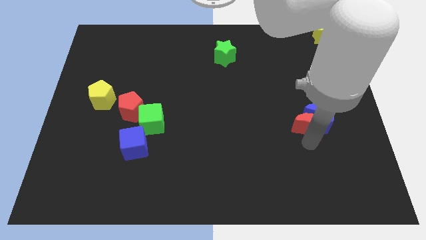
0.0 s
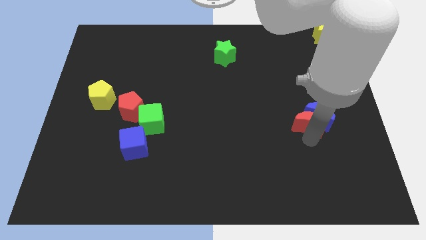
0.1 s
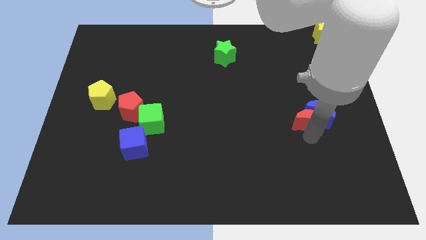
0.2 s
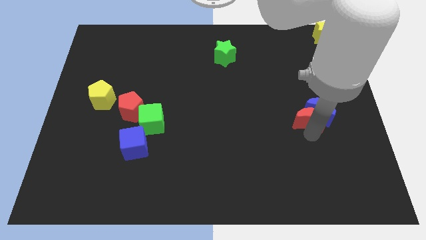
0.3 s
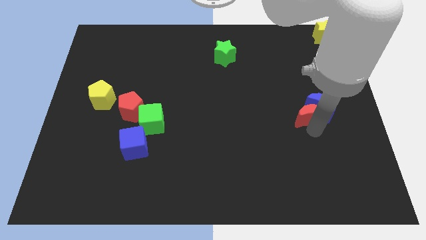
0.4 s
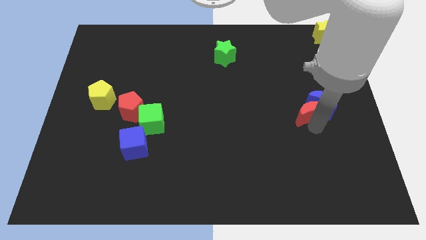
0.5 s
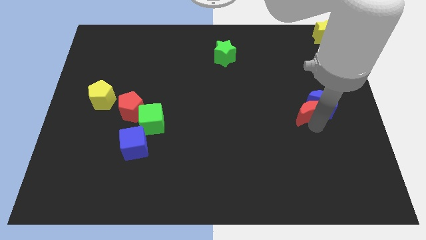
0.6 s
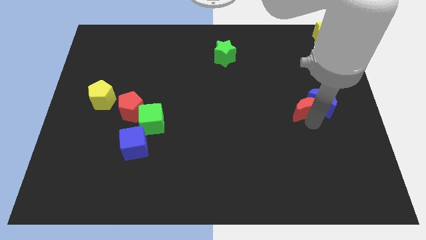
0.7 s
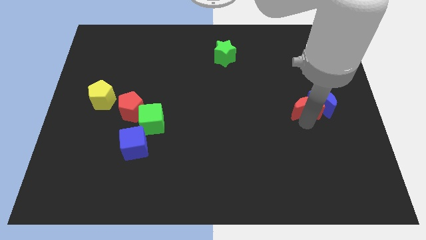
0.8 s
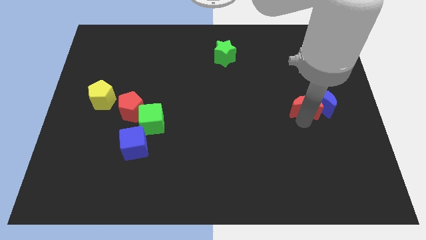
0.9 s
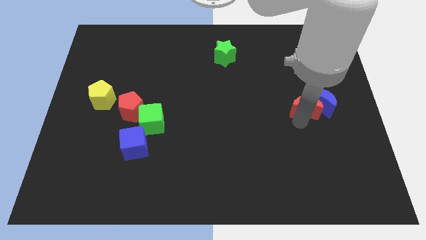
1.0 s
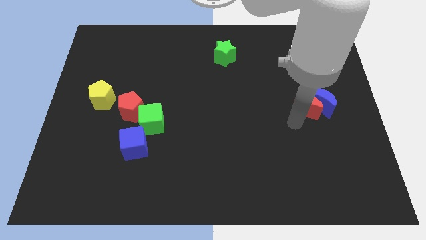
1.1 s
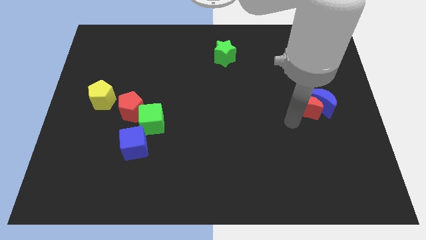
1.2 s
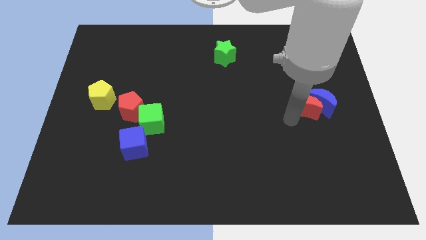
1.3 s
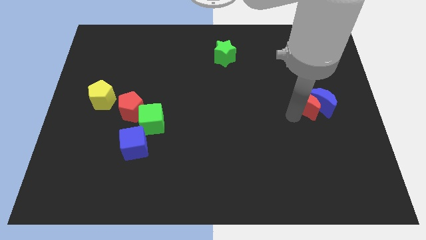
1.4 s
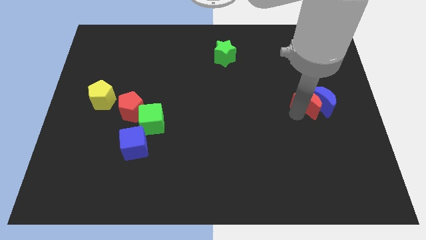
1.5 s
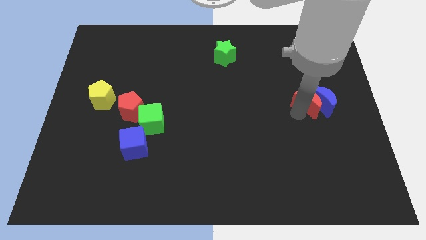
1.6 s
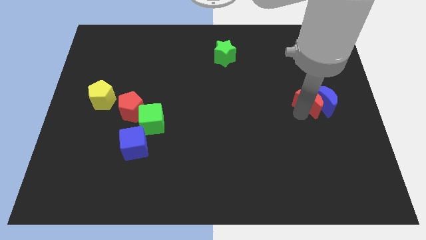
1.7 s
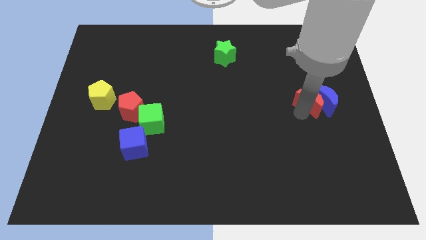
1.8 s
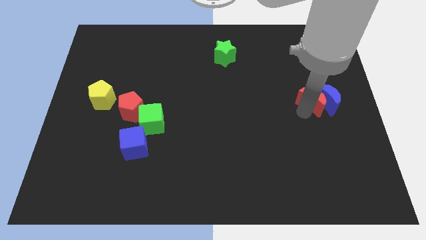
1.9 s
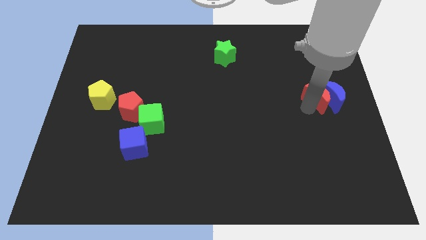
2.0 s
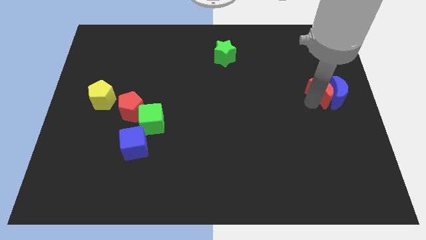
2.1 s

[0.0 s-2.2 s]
push the red moon and blue moon to the center right

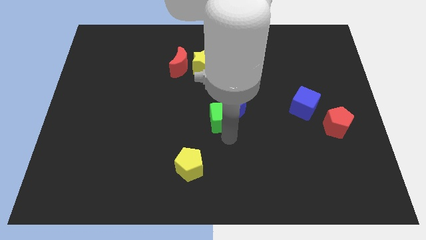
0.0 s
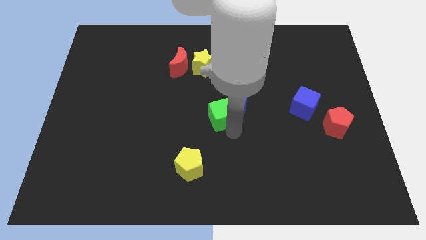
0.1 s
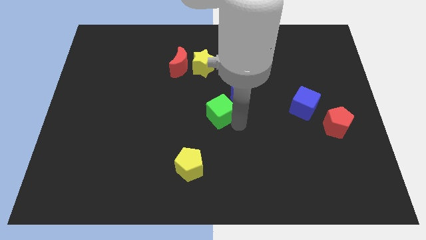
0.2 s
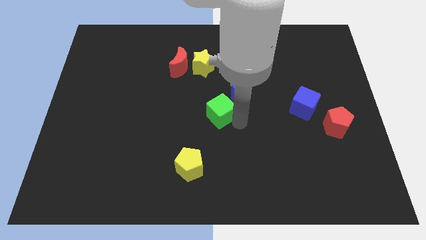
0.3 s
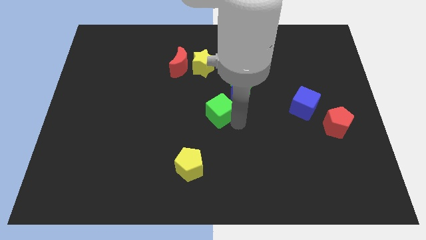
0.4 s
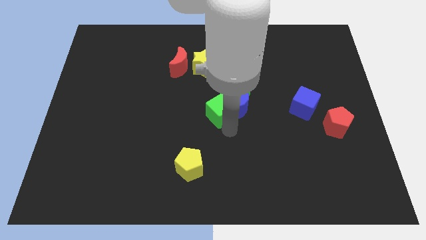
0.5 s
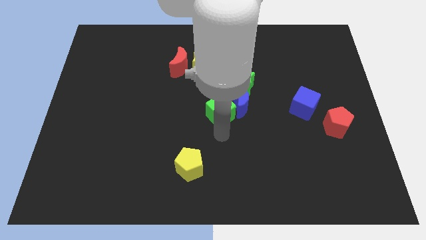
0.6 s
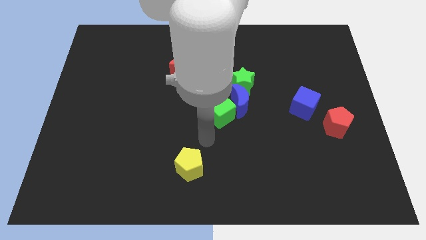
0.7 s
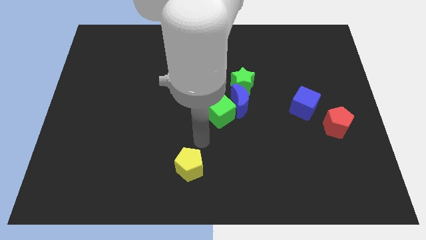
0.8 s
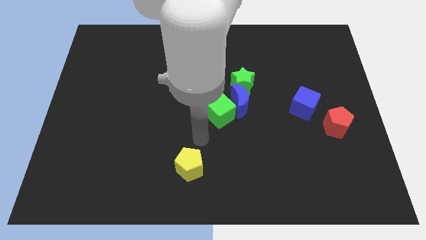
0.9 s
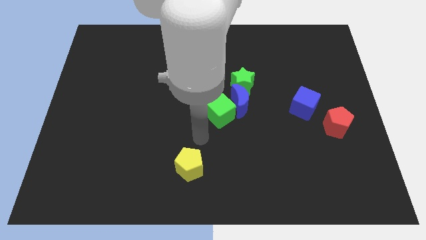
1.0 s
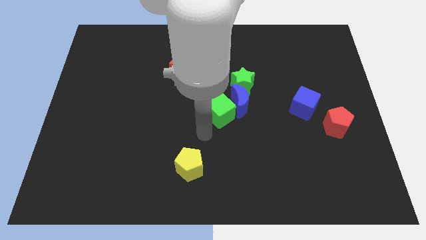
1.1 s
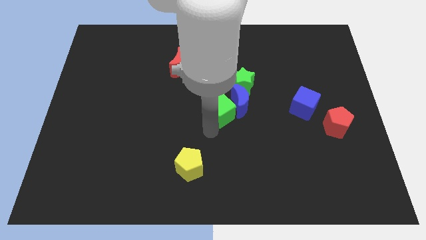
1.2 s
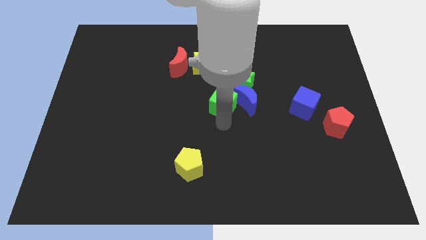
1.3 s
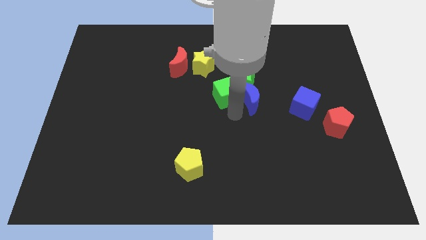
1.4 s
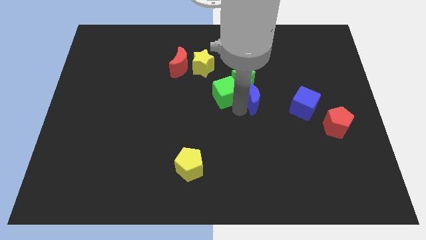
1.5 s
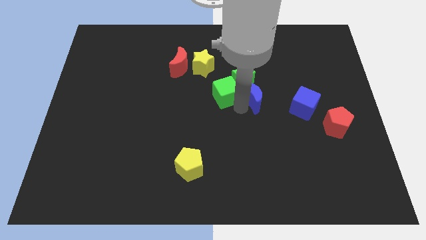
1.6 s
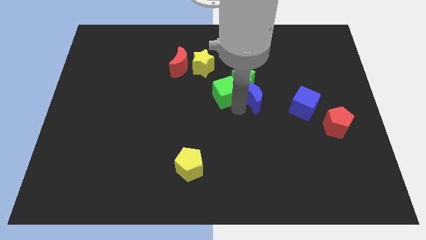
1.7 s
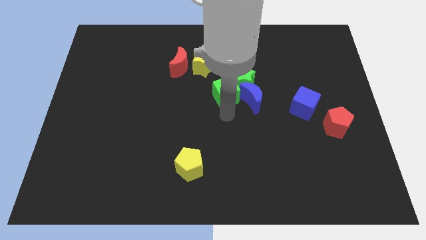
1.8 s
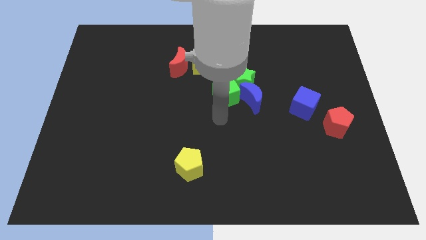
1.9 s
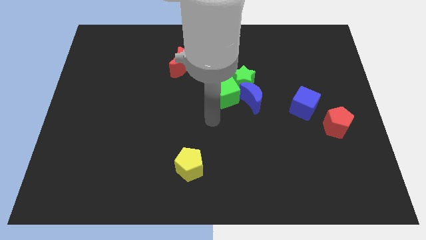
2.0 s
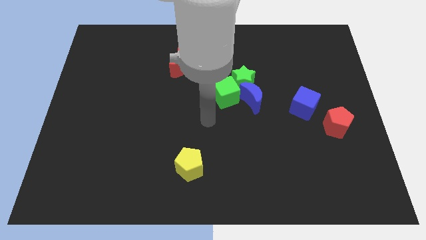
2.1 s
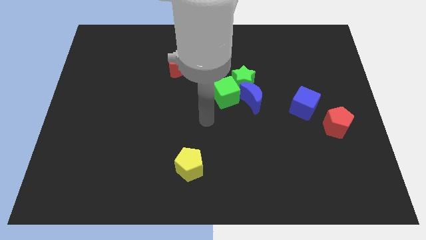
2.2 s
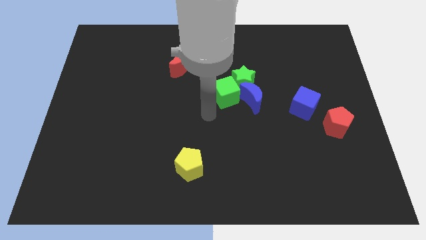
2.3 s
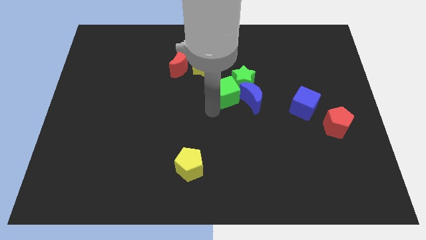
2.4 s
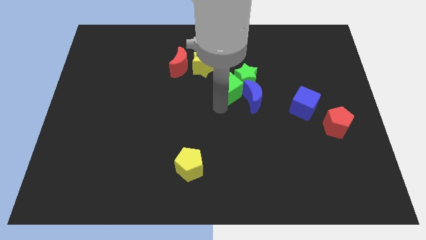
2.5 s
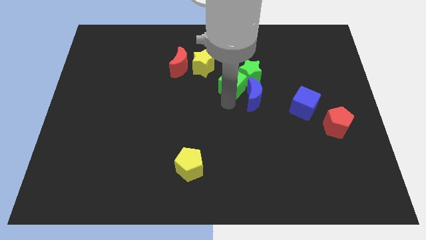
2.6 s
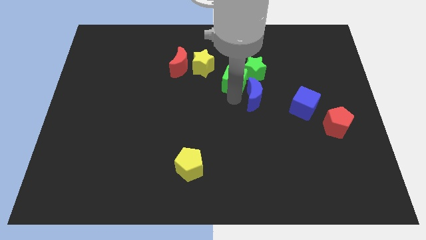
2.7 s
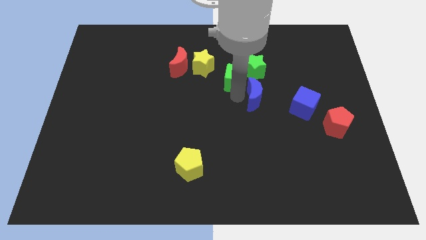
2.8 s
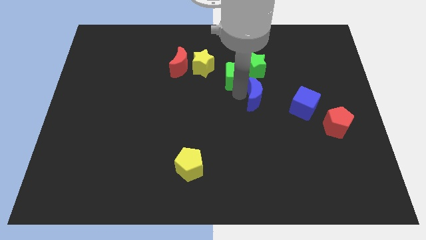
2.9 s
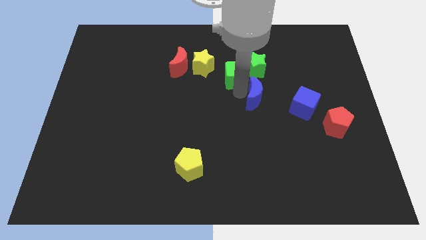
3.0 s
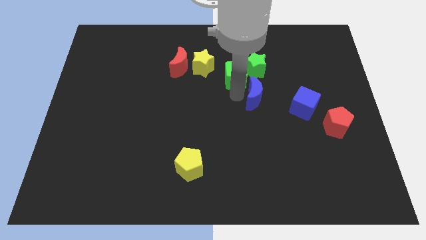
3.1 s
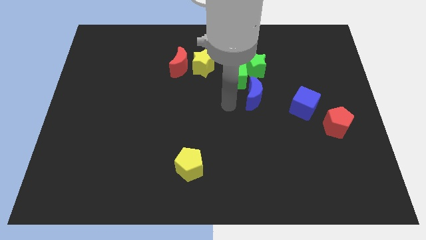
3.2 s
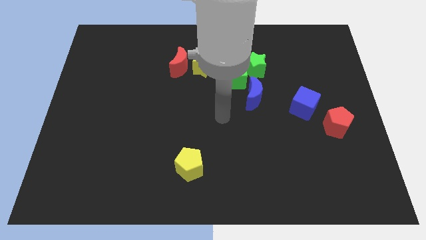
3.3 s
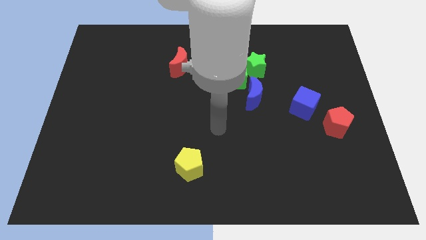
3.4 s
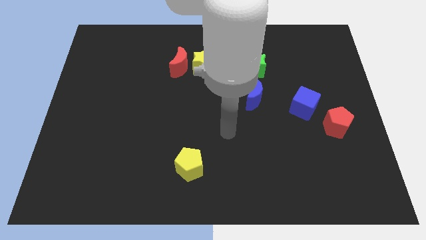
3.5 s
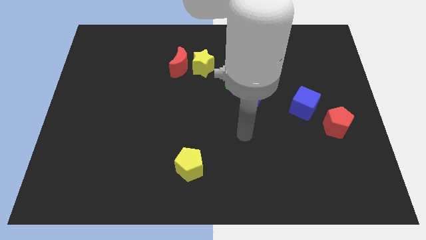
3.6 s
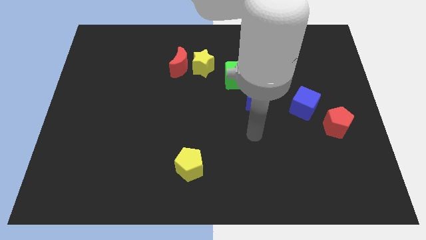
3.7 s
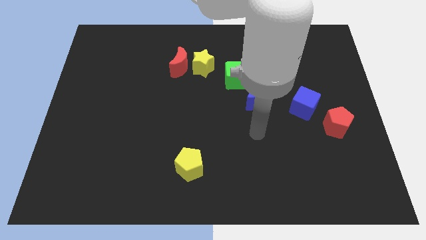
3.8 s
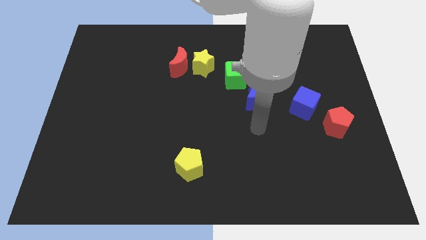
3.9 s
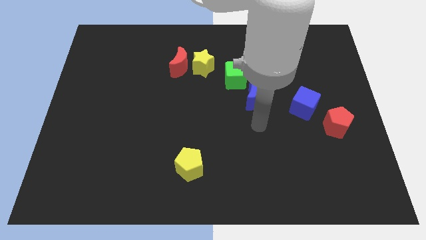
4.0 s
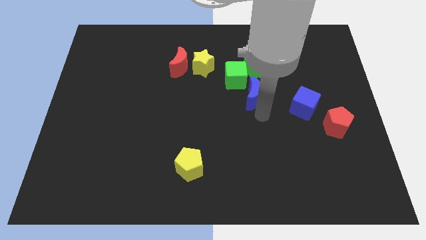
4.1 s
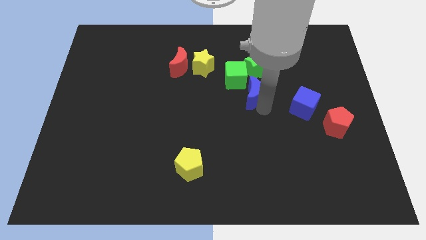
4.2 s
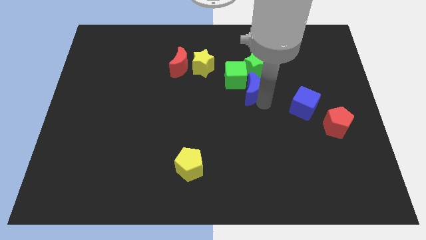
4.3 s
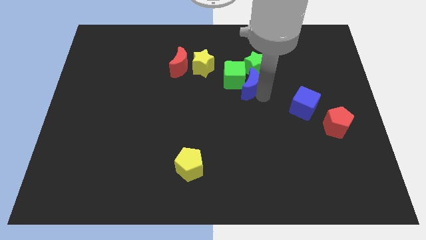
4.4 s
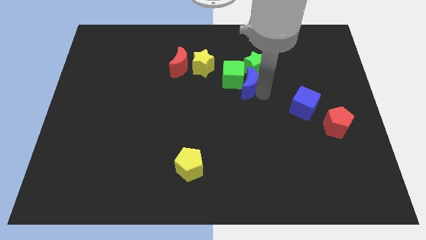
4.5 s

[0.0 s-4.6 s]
push the group of green blocks and blue crescent to the top side of the board

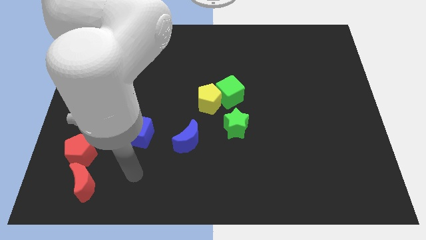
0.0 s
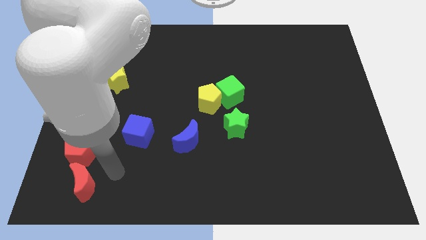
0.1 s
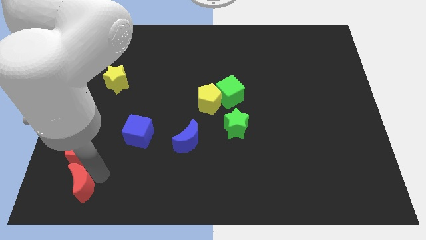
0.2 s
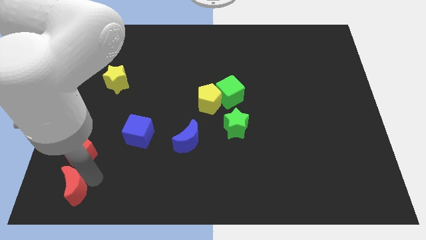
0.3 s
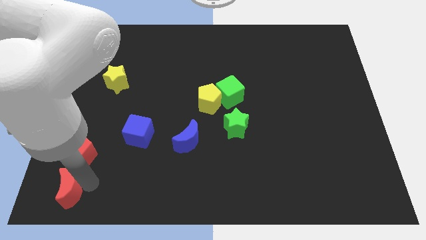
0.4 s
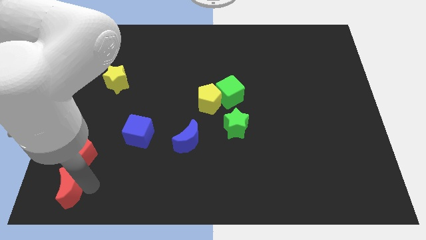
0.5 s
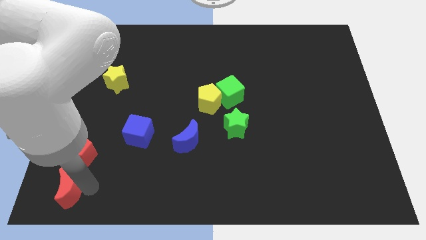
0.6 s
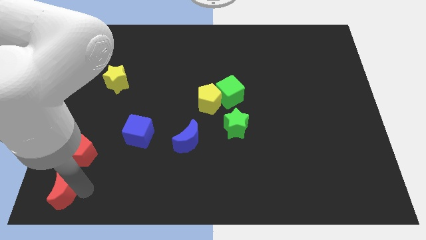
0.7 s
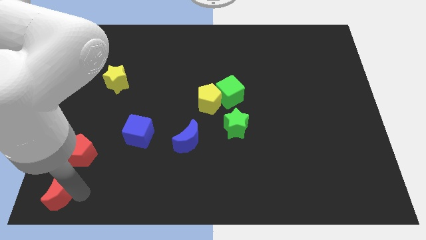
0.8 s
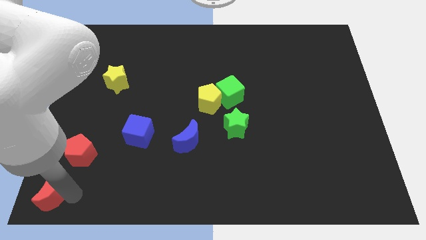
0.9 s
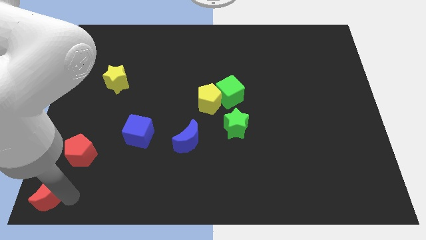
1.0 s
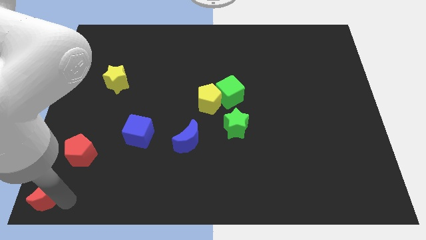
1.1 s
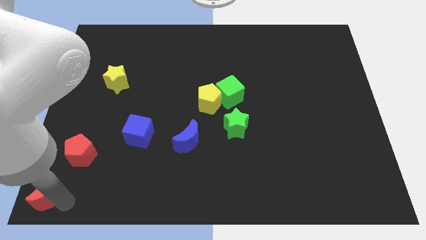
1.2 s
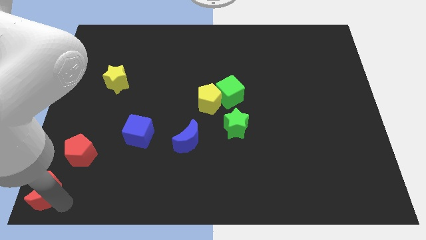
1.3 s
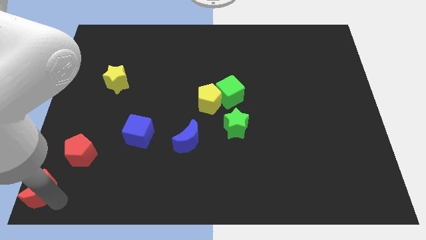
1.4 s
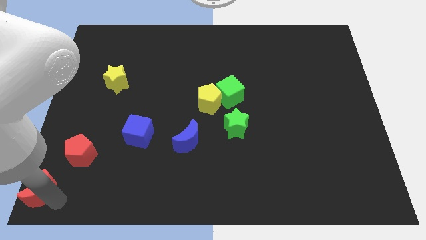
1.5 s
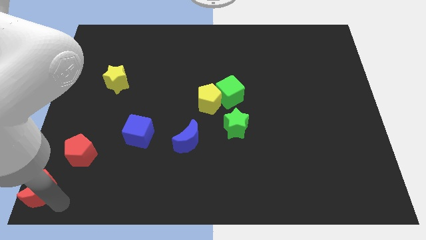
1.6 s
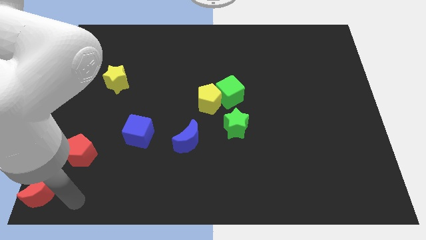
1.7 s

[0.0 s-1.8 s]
separate the red moon from the red pentagon

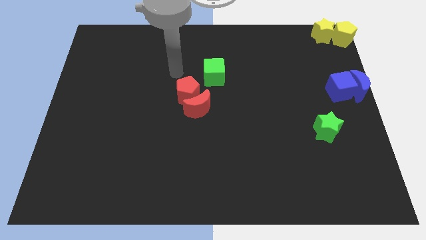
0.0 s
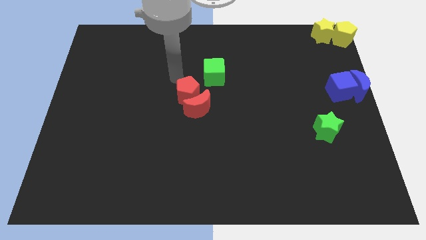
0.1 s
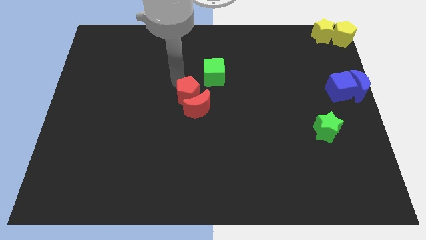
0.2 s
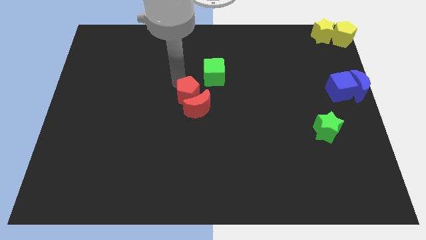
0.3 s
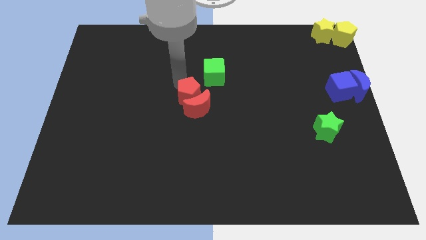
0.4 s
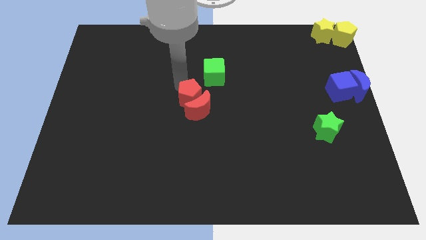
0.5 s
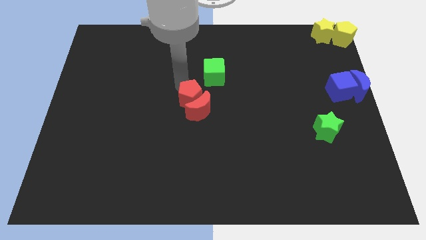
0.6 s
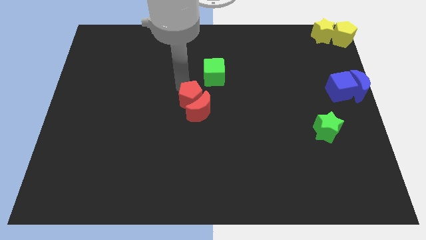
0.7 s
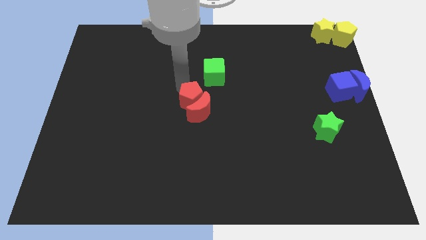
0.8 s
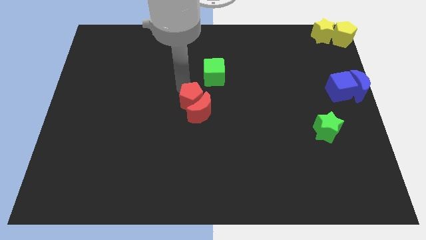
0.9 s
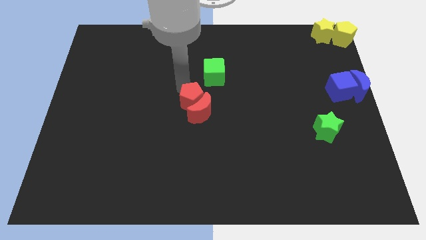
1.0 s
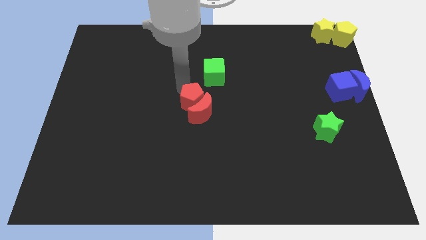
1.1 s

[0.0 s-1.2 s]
push the red pentagon into the red crescent
